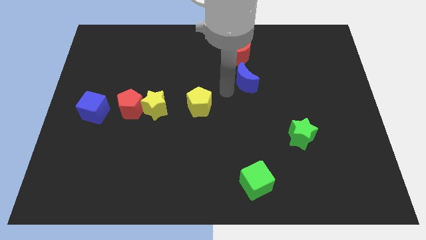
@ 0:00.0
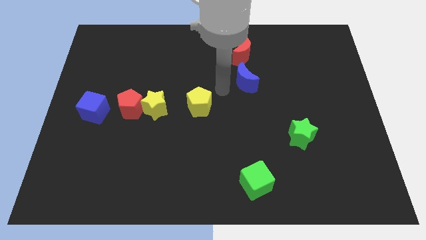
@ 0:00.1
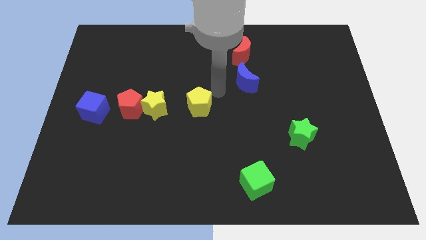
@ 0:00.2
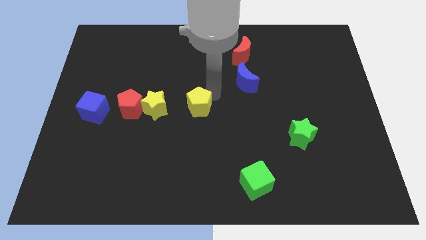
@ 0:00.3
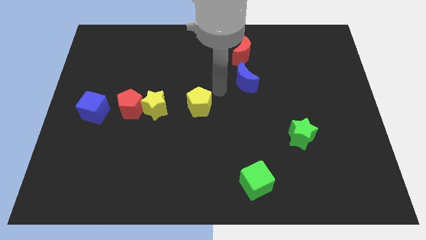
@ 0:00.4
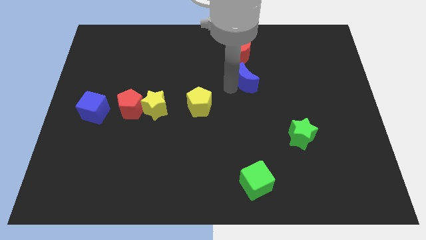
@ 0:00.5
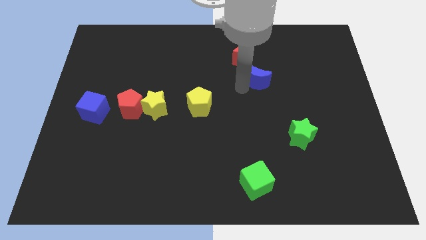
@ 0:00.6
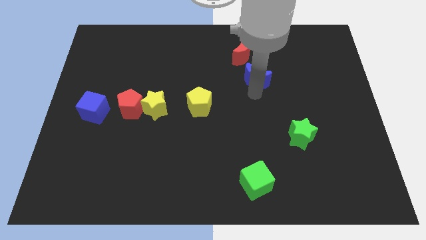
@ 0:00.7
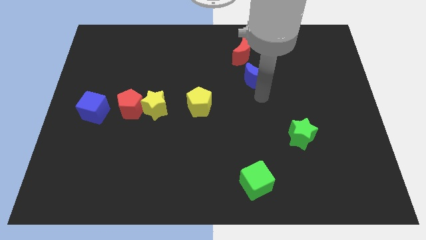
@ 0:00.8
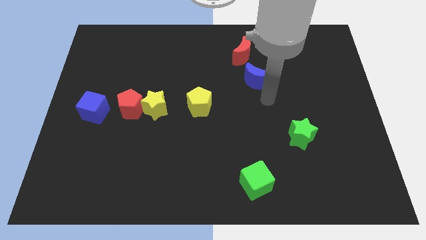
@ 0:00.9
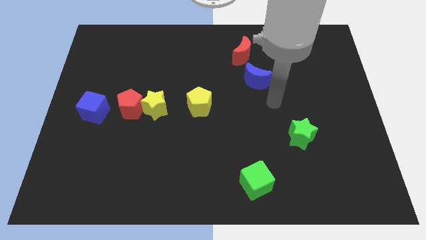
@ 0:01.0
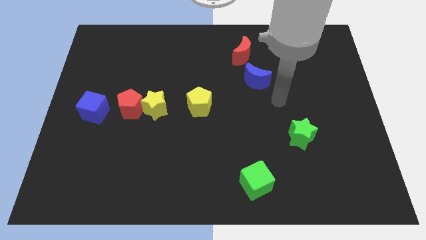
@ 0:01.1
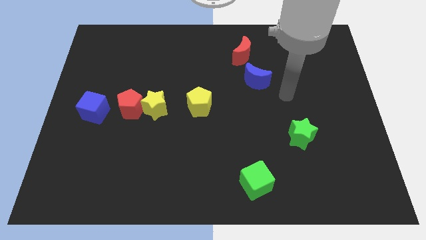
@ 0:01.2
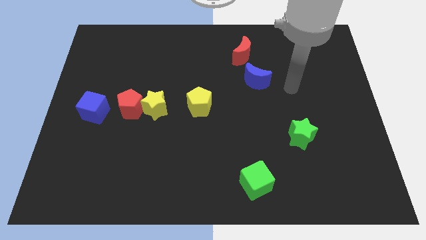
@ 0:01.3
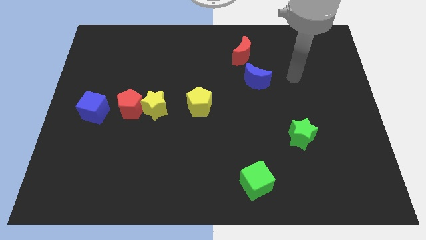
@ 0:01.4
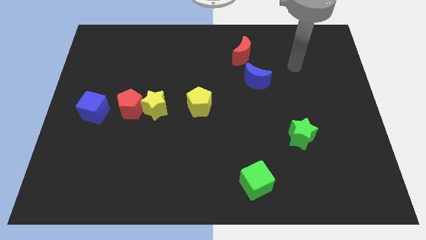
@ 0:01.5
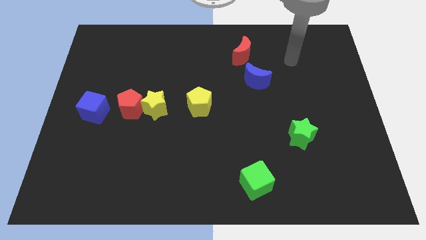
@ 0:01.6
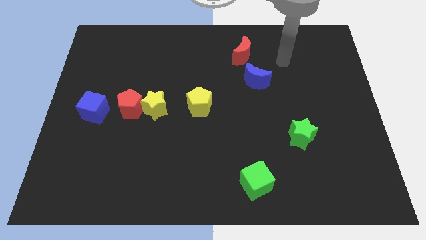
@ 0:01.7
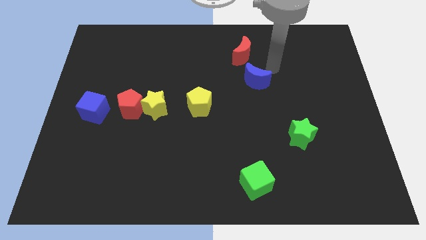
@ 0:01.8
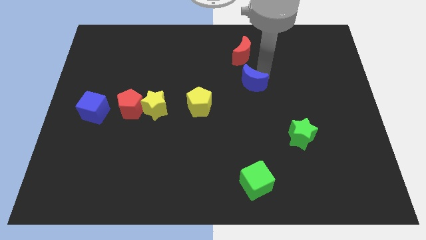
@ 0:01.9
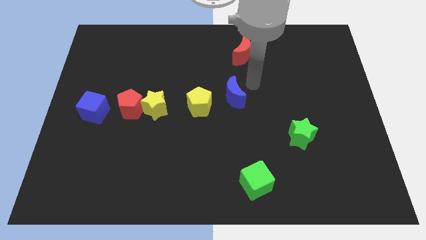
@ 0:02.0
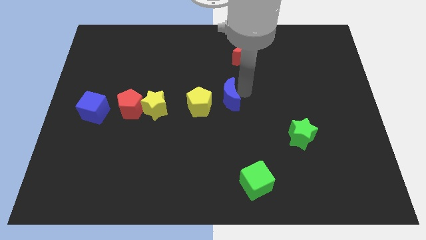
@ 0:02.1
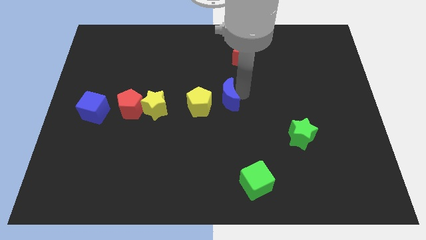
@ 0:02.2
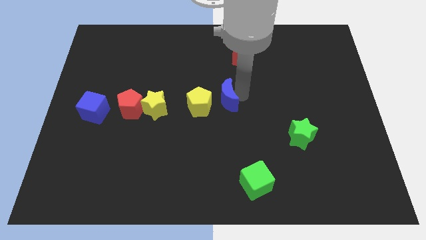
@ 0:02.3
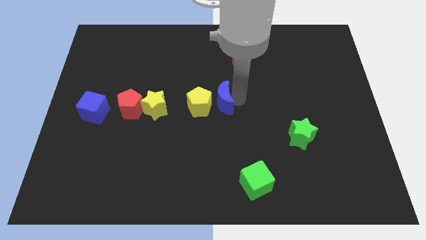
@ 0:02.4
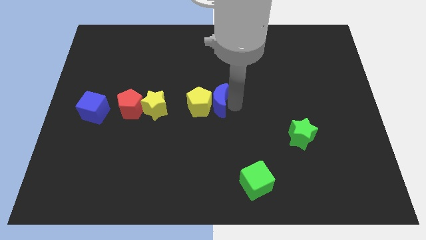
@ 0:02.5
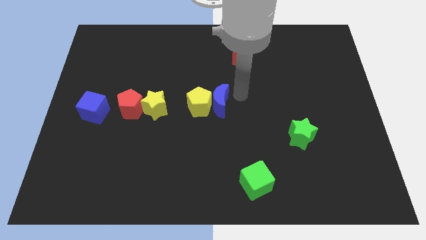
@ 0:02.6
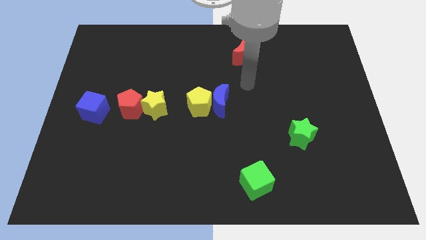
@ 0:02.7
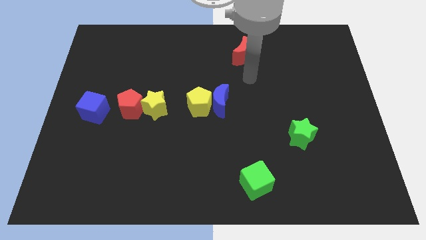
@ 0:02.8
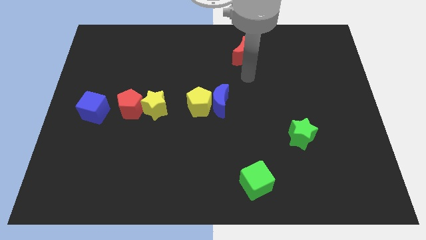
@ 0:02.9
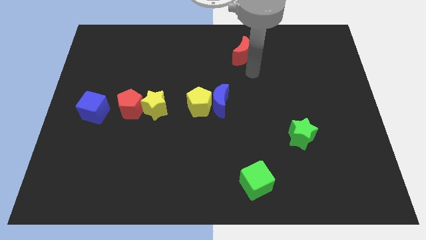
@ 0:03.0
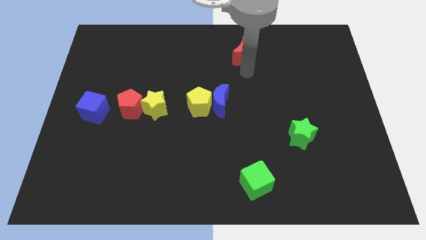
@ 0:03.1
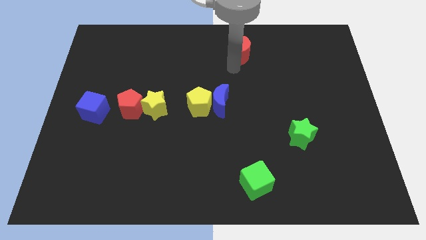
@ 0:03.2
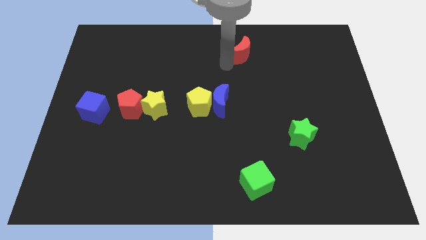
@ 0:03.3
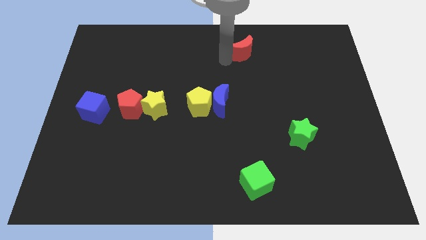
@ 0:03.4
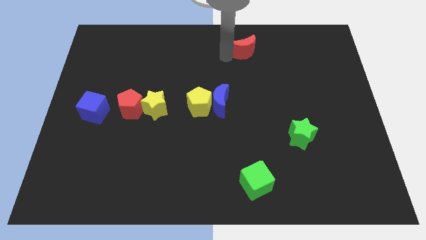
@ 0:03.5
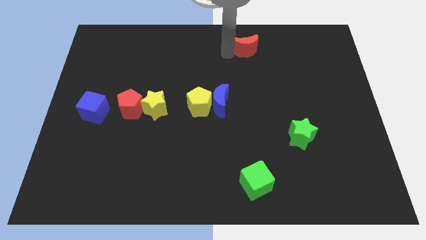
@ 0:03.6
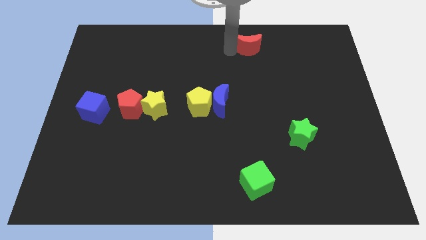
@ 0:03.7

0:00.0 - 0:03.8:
move the blue crescent at the center

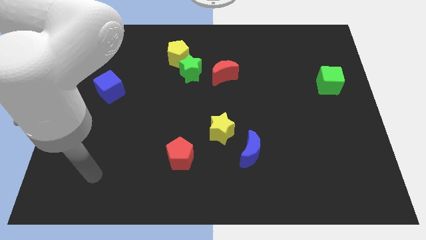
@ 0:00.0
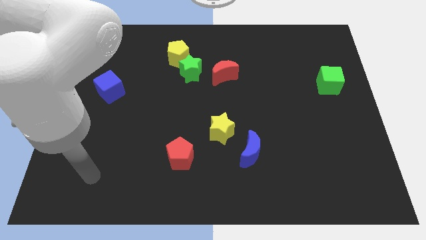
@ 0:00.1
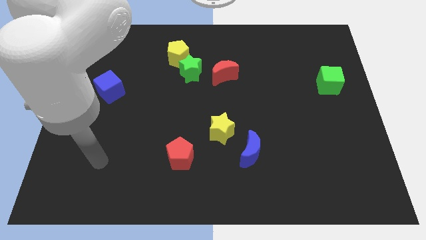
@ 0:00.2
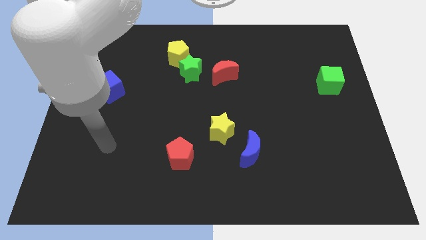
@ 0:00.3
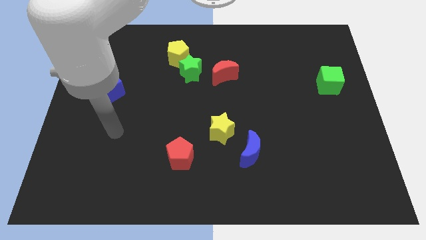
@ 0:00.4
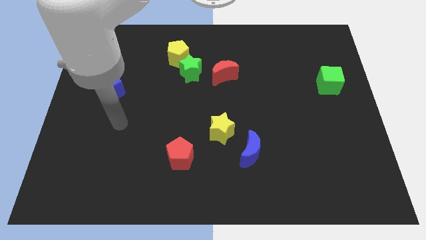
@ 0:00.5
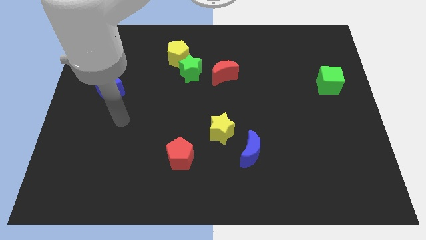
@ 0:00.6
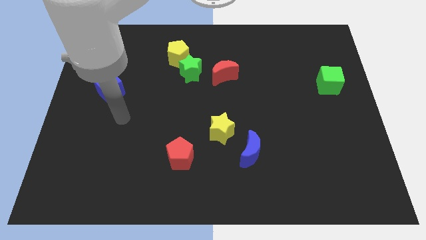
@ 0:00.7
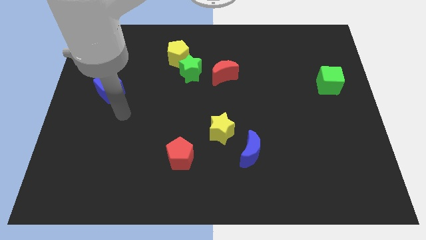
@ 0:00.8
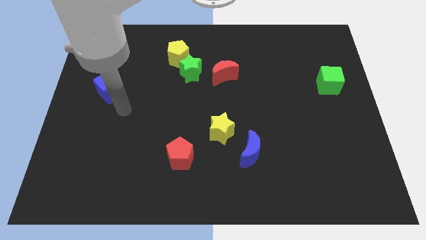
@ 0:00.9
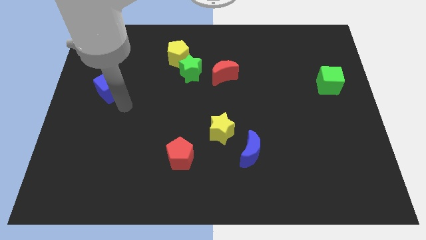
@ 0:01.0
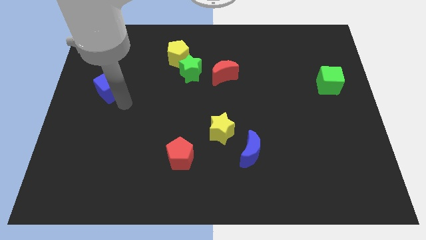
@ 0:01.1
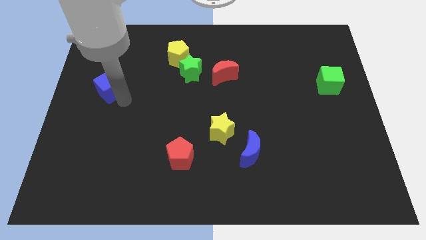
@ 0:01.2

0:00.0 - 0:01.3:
move your arm to the right of blue cube

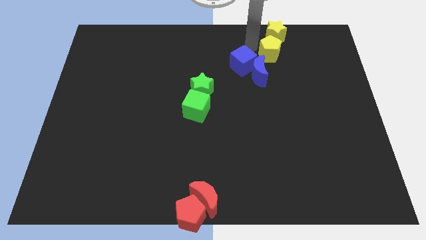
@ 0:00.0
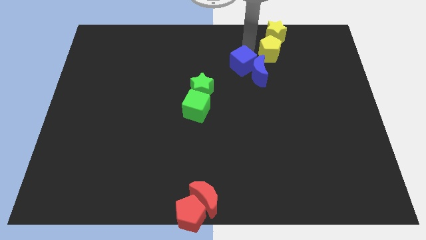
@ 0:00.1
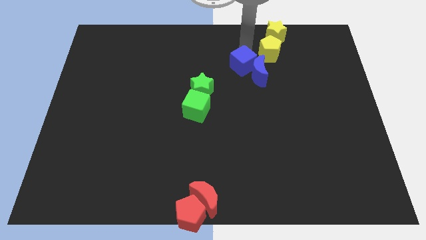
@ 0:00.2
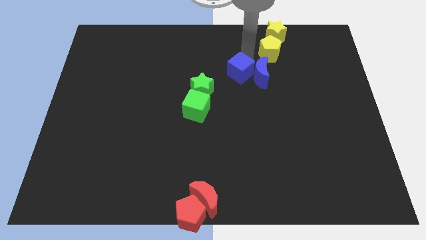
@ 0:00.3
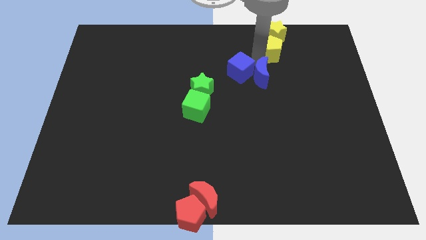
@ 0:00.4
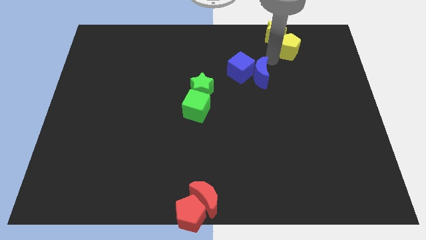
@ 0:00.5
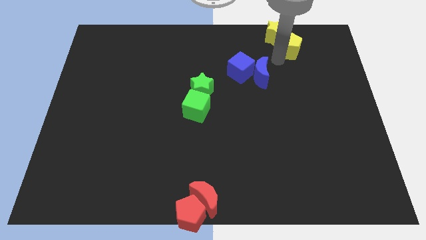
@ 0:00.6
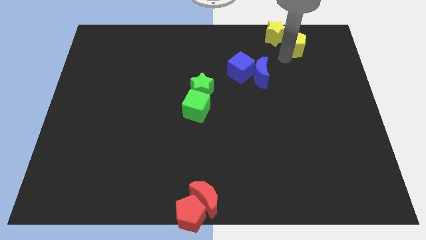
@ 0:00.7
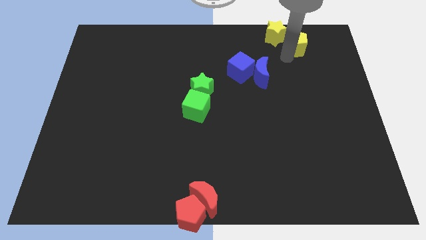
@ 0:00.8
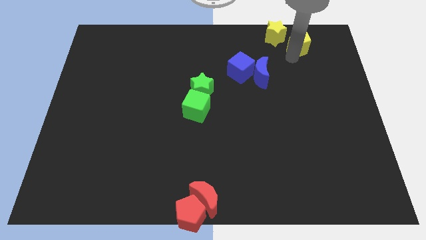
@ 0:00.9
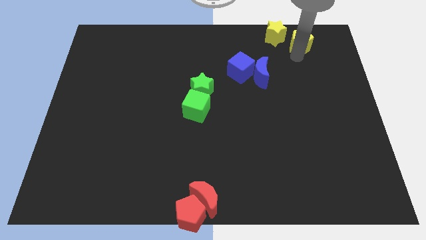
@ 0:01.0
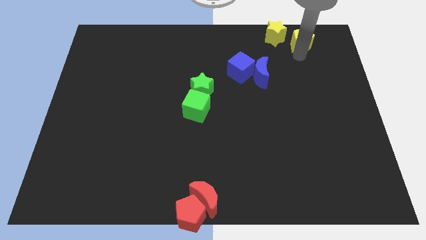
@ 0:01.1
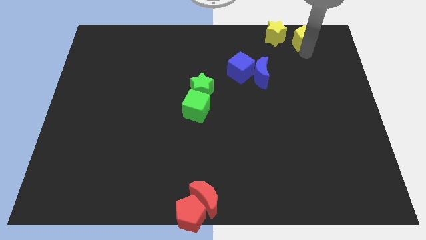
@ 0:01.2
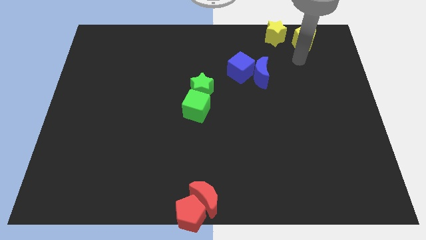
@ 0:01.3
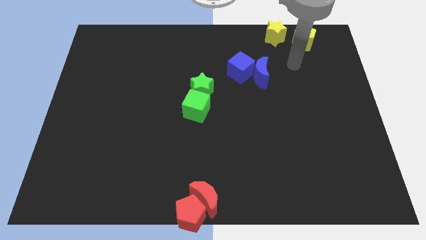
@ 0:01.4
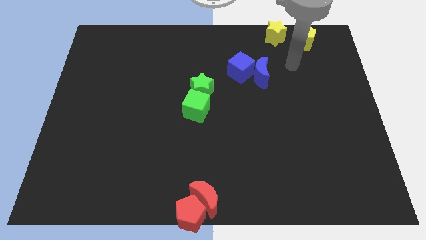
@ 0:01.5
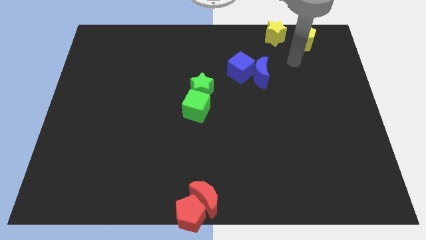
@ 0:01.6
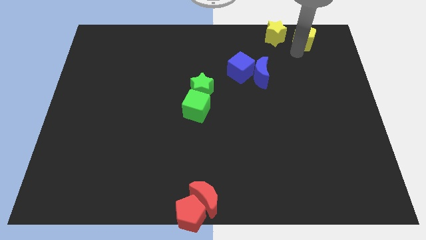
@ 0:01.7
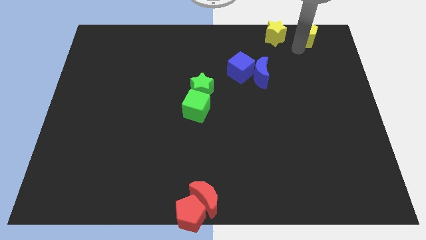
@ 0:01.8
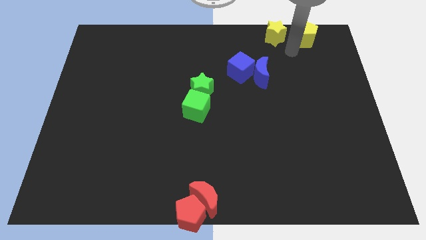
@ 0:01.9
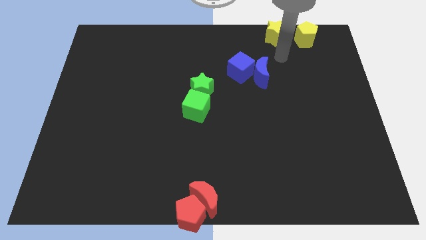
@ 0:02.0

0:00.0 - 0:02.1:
place yellow pentagon to right of yellow star

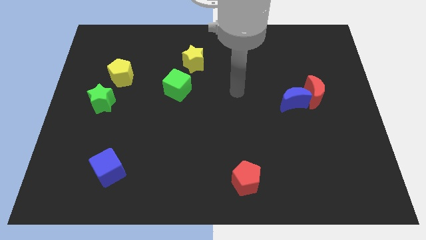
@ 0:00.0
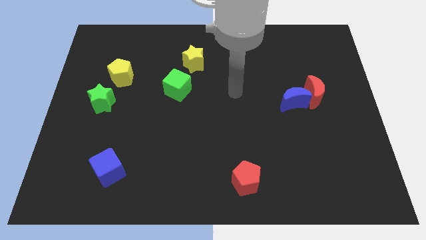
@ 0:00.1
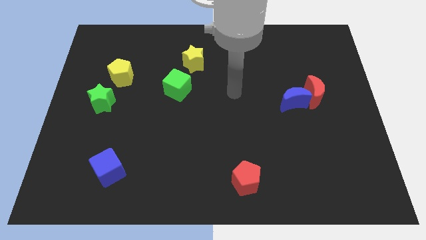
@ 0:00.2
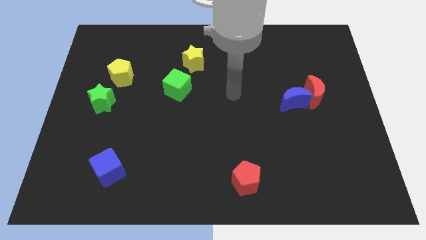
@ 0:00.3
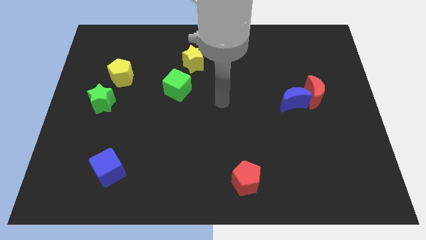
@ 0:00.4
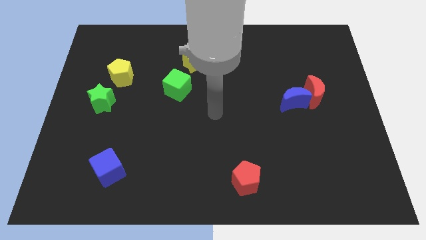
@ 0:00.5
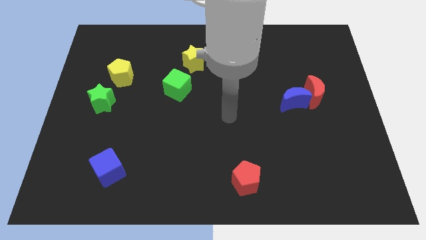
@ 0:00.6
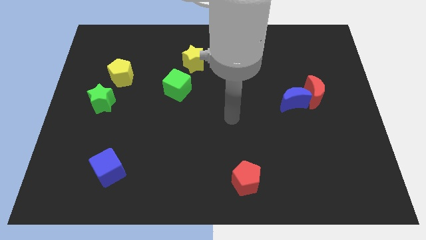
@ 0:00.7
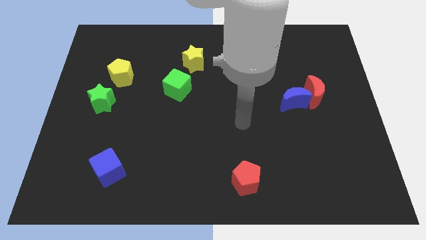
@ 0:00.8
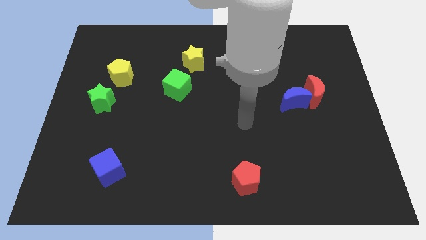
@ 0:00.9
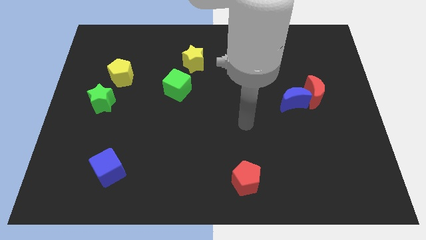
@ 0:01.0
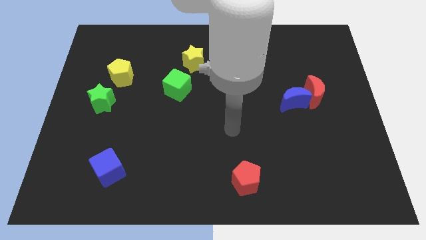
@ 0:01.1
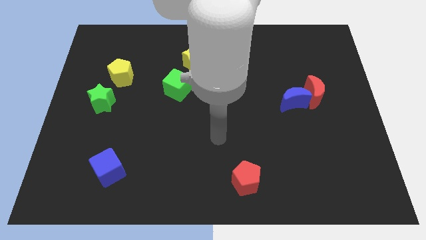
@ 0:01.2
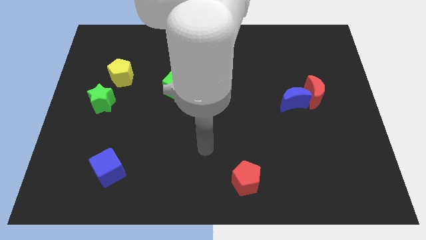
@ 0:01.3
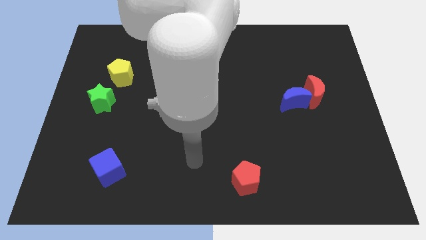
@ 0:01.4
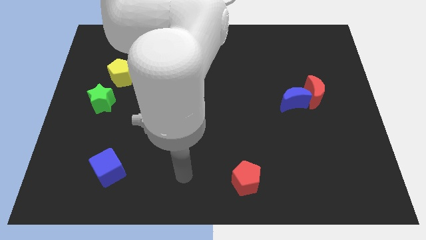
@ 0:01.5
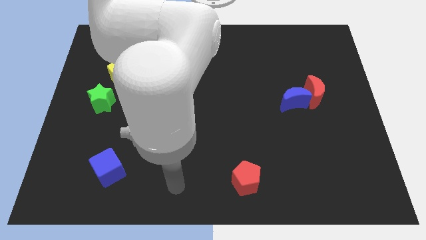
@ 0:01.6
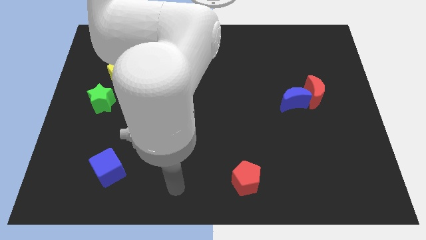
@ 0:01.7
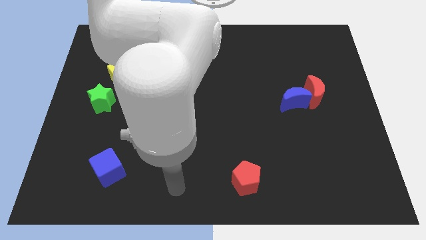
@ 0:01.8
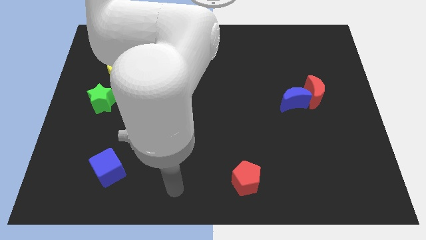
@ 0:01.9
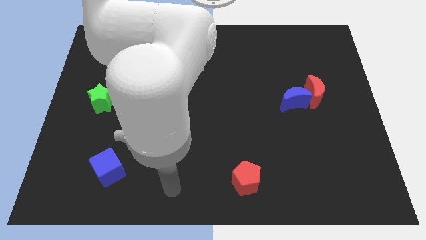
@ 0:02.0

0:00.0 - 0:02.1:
place your arm towards bottom left side
